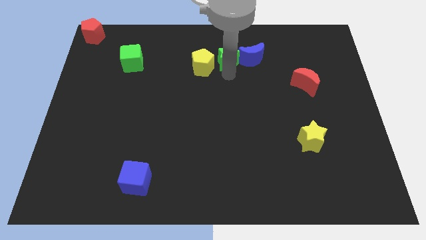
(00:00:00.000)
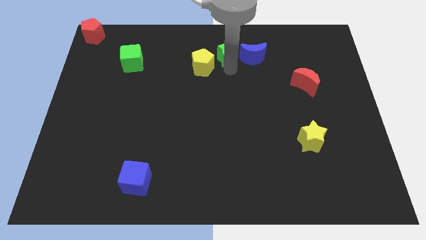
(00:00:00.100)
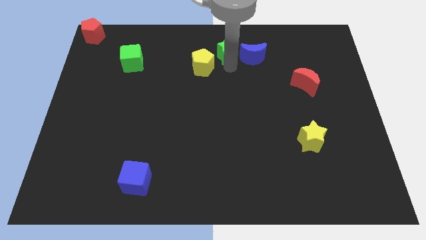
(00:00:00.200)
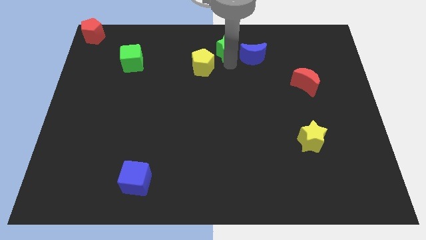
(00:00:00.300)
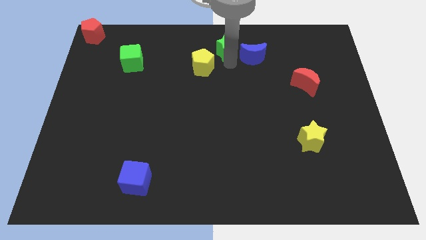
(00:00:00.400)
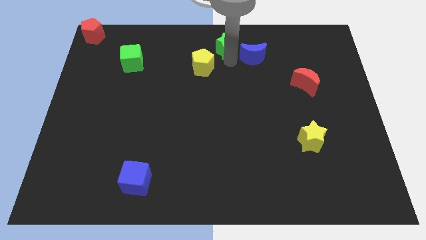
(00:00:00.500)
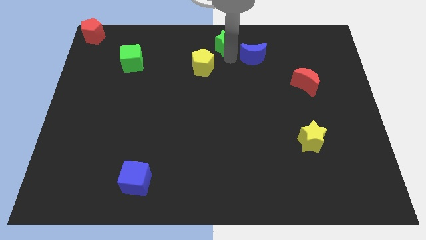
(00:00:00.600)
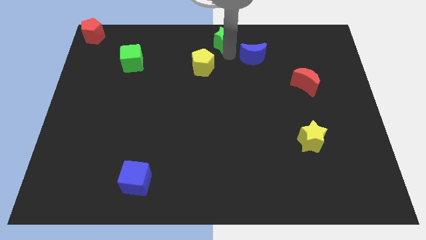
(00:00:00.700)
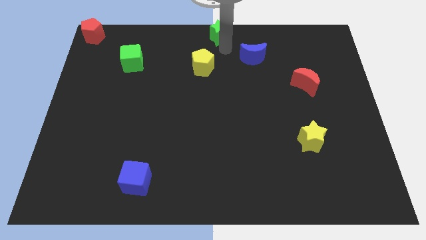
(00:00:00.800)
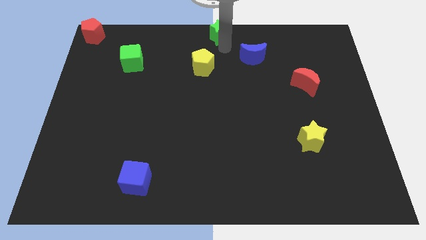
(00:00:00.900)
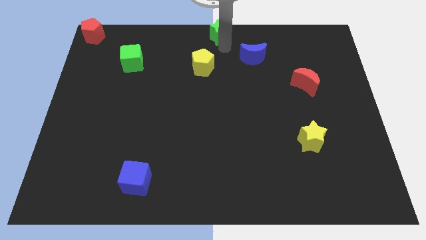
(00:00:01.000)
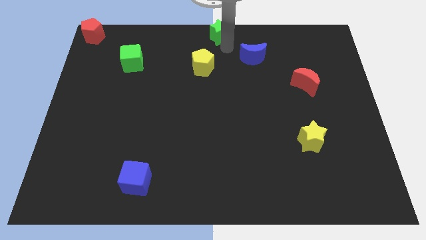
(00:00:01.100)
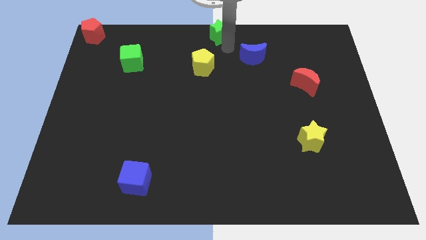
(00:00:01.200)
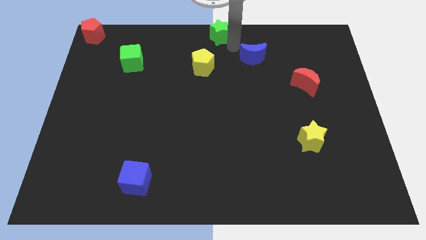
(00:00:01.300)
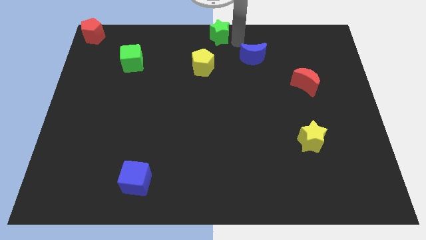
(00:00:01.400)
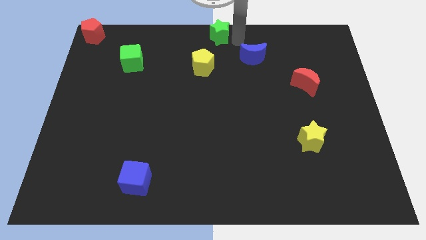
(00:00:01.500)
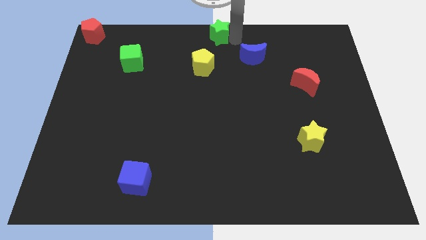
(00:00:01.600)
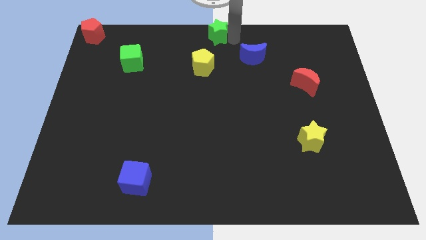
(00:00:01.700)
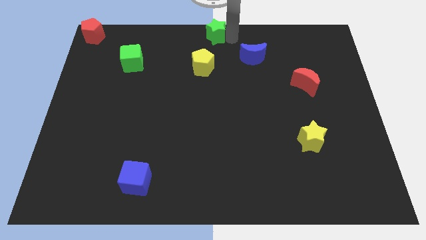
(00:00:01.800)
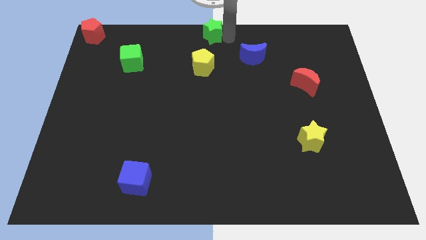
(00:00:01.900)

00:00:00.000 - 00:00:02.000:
move the green star diagonally to blue moon

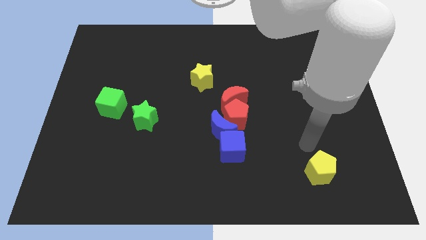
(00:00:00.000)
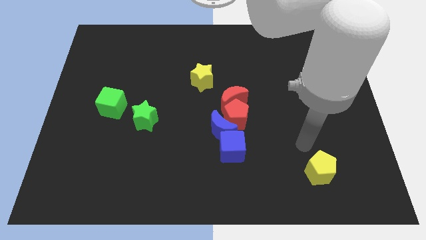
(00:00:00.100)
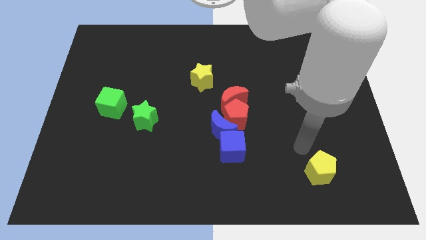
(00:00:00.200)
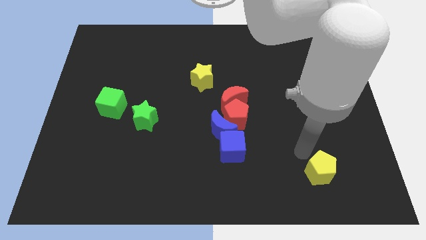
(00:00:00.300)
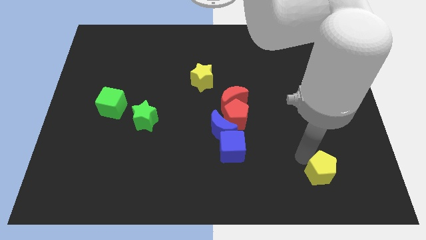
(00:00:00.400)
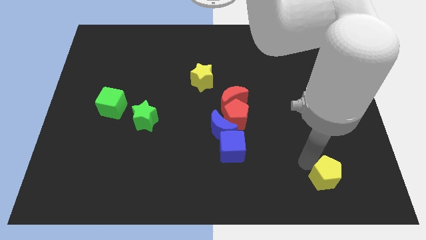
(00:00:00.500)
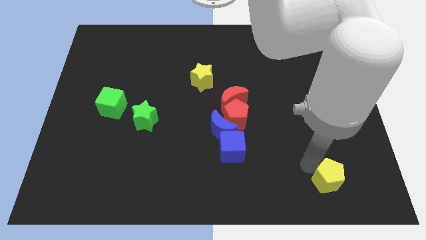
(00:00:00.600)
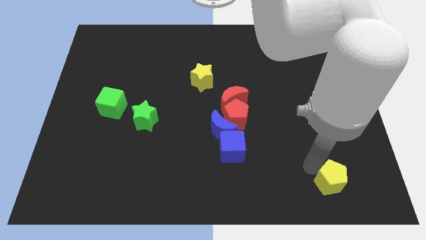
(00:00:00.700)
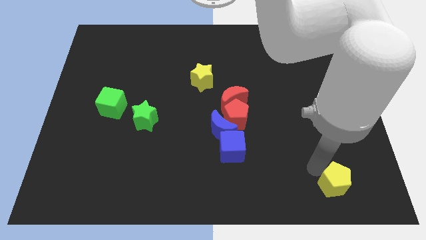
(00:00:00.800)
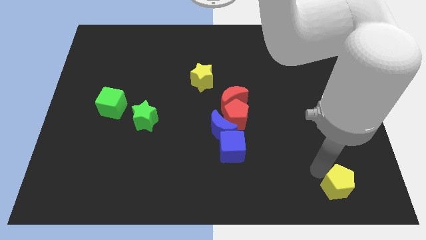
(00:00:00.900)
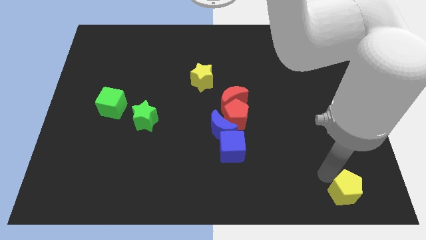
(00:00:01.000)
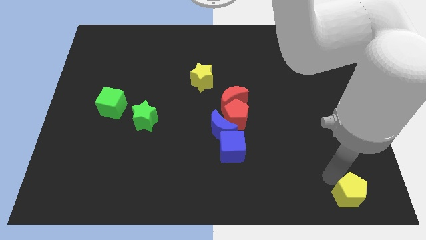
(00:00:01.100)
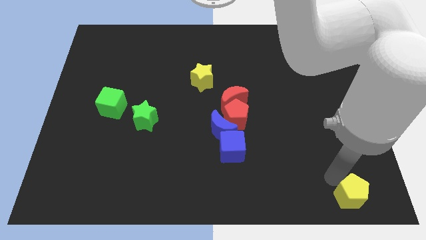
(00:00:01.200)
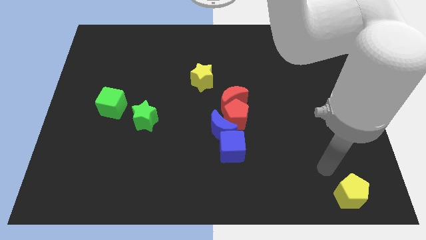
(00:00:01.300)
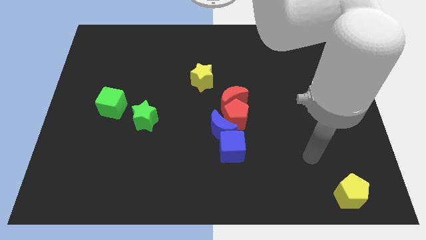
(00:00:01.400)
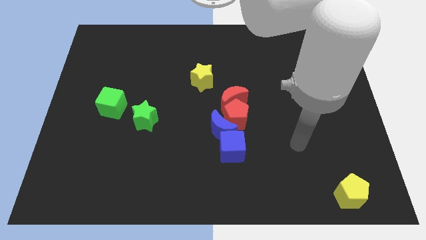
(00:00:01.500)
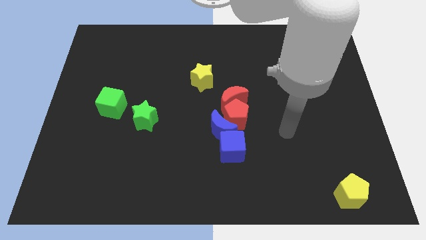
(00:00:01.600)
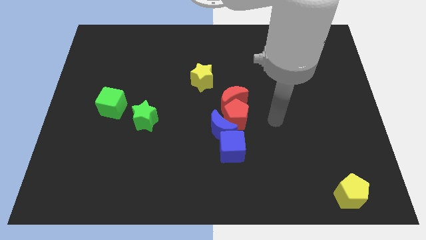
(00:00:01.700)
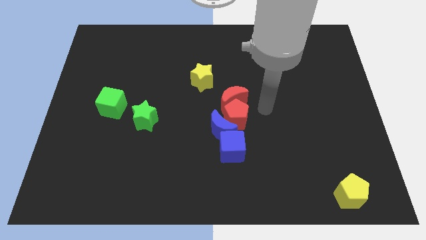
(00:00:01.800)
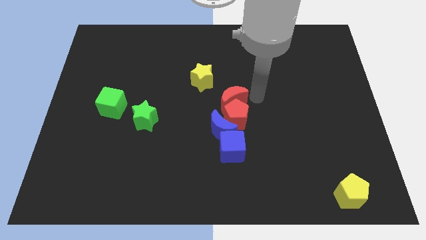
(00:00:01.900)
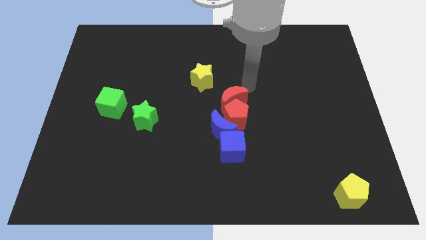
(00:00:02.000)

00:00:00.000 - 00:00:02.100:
slide yellow pentagon towards the bottom right

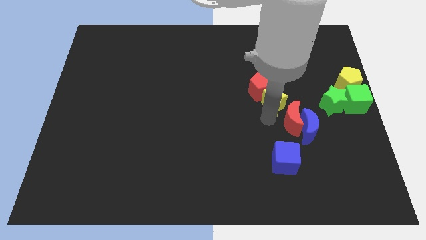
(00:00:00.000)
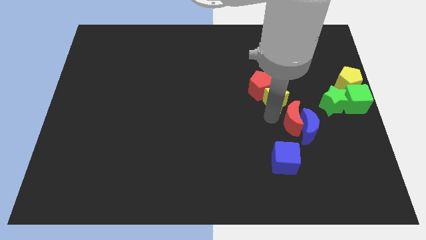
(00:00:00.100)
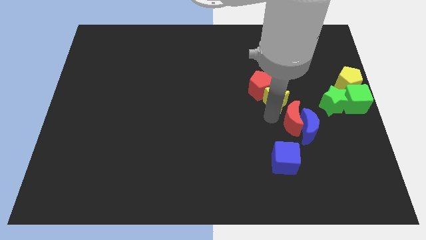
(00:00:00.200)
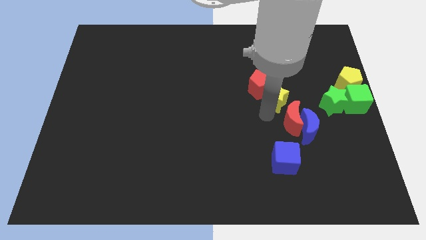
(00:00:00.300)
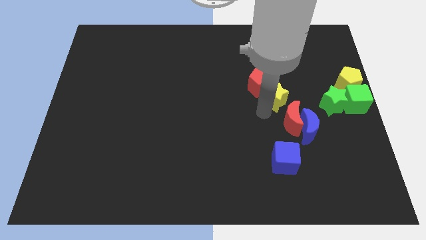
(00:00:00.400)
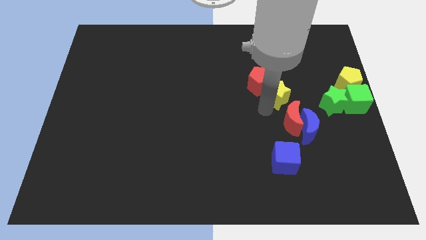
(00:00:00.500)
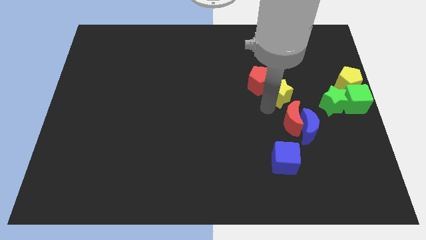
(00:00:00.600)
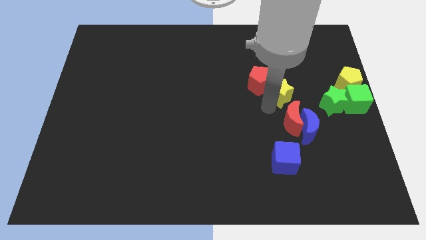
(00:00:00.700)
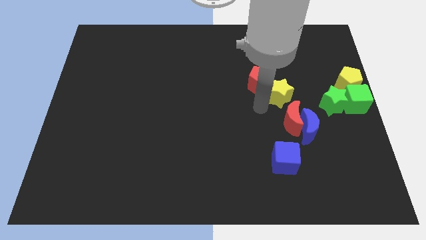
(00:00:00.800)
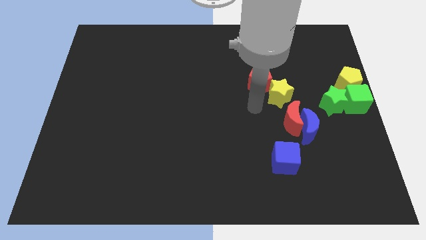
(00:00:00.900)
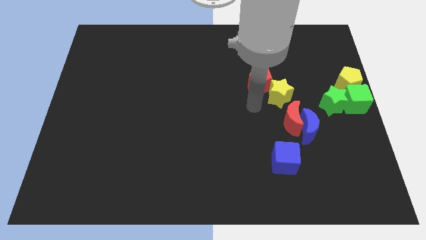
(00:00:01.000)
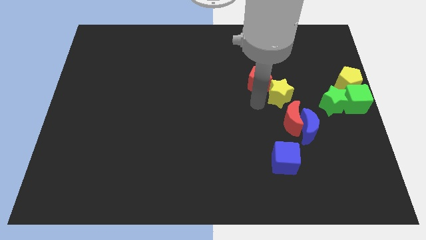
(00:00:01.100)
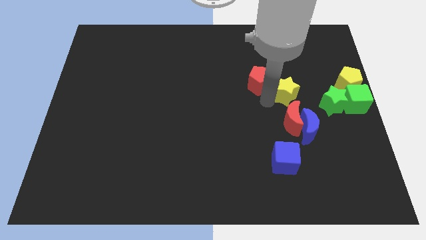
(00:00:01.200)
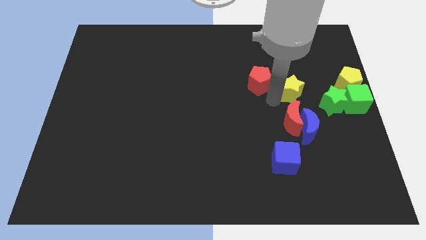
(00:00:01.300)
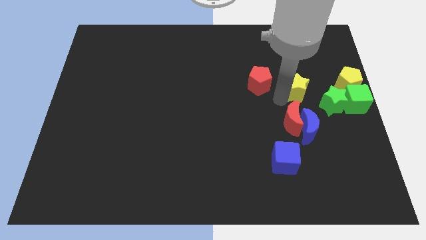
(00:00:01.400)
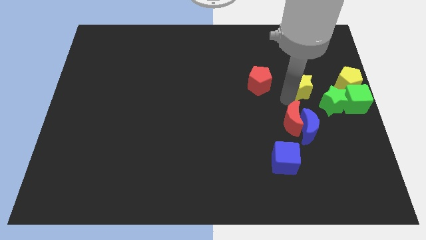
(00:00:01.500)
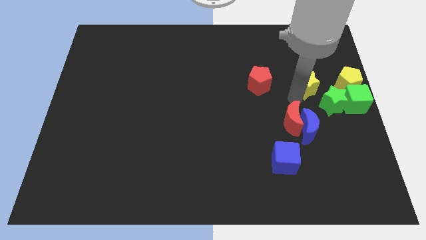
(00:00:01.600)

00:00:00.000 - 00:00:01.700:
separate the yellow star from the red pentagon

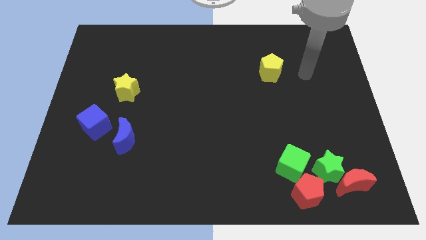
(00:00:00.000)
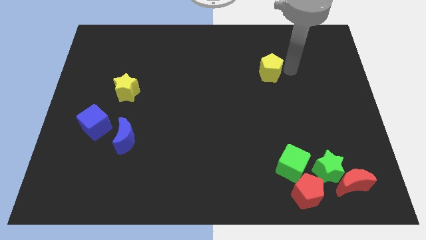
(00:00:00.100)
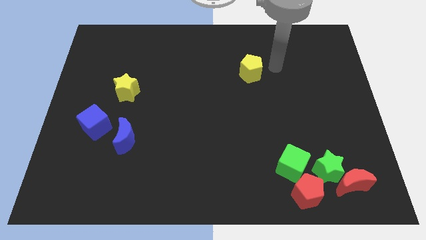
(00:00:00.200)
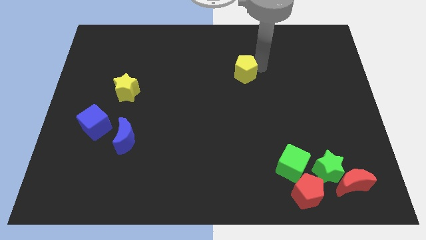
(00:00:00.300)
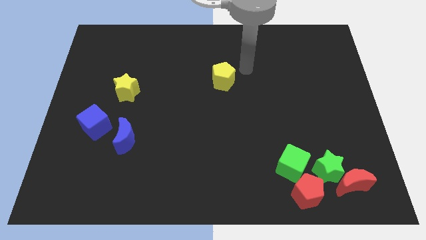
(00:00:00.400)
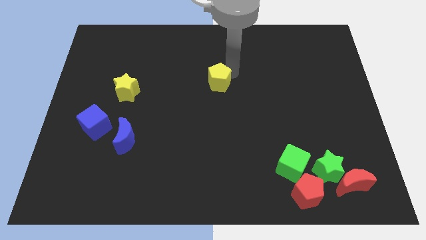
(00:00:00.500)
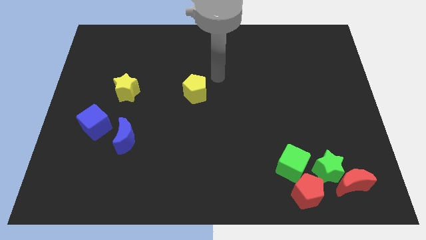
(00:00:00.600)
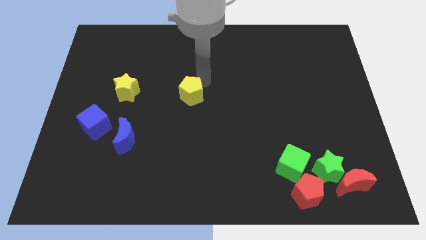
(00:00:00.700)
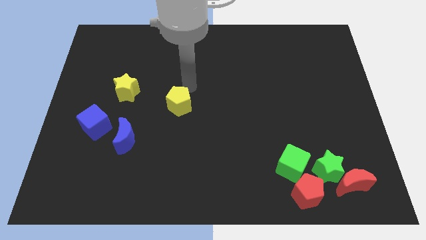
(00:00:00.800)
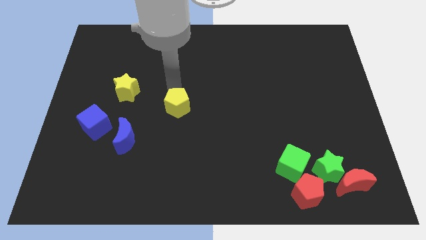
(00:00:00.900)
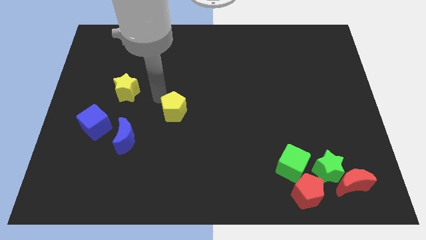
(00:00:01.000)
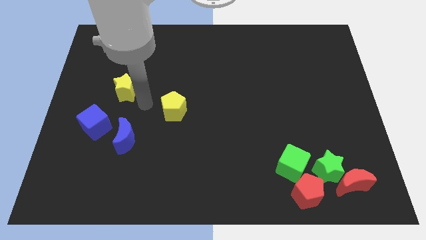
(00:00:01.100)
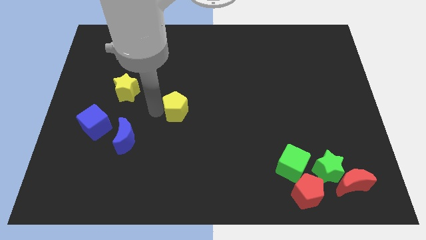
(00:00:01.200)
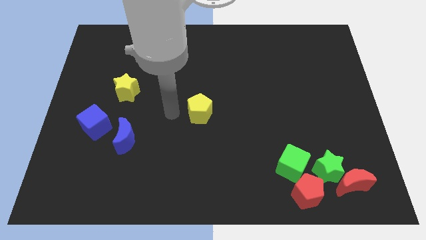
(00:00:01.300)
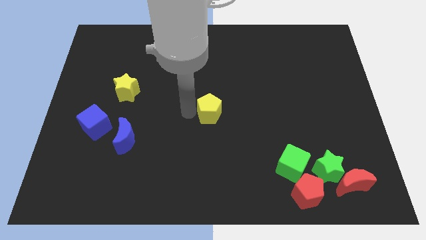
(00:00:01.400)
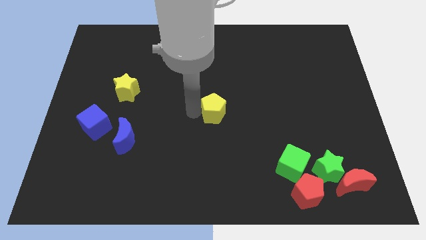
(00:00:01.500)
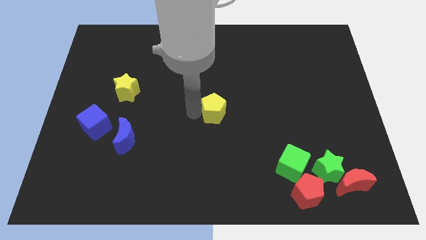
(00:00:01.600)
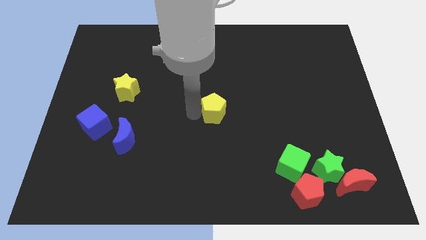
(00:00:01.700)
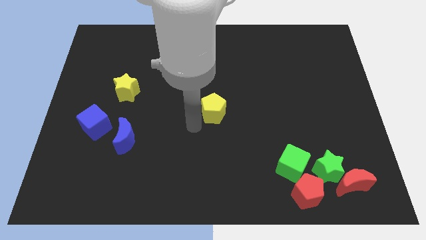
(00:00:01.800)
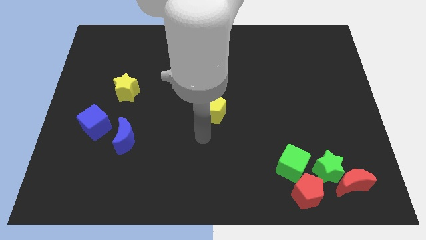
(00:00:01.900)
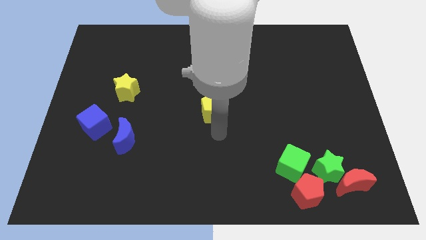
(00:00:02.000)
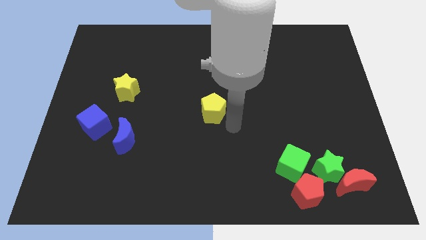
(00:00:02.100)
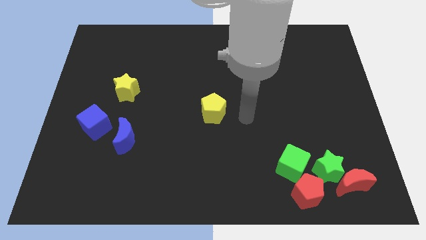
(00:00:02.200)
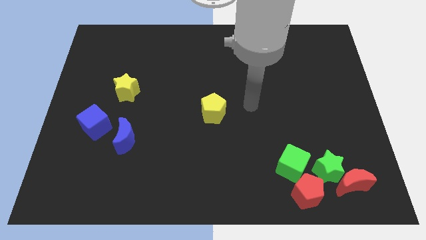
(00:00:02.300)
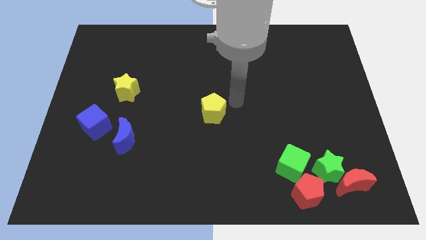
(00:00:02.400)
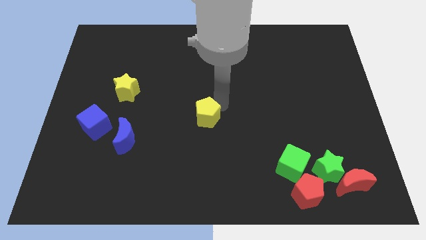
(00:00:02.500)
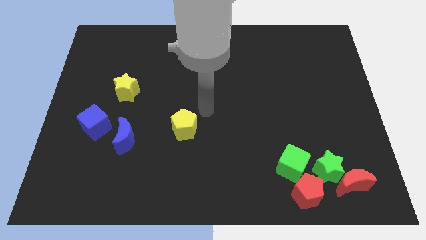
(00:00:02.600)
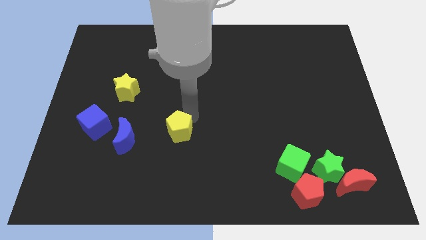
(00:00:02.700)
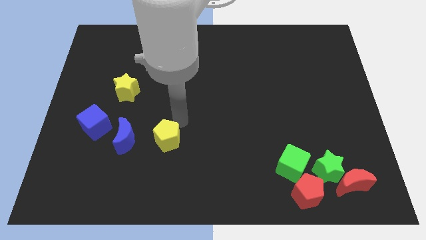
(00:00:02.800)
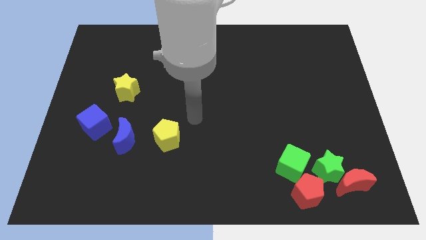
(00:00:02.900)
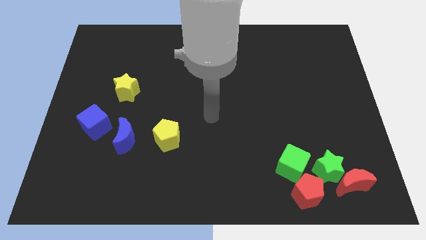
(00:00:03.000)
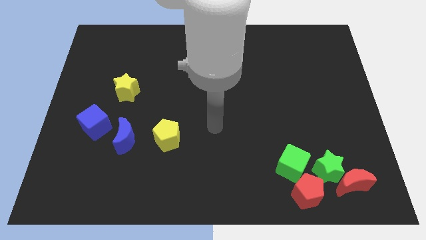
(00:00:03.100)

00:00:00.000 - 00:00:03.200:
place the yellow pentagon horizontally to the right side of the blue crescent
